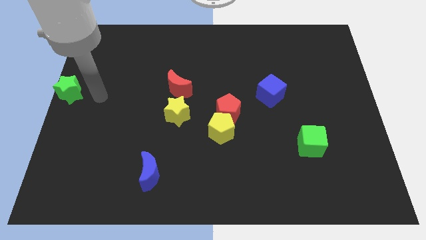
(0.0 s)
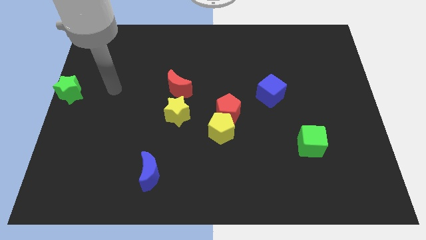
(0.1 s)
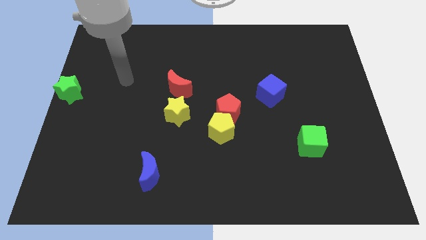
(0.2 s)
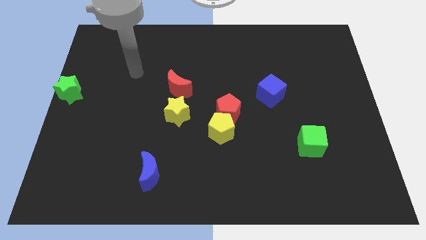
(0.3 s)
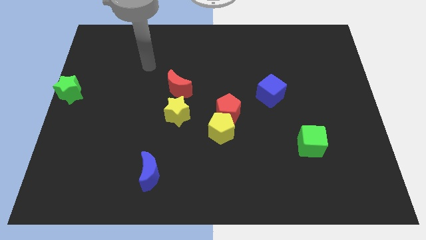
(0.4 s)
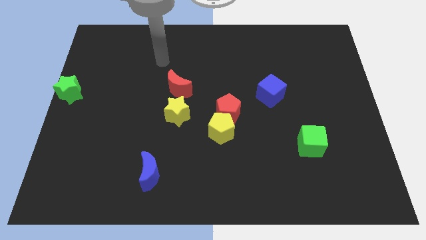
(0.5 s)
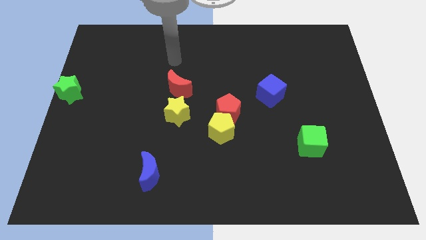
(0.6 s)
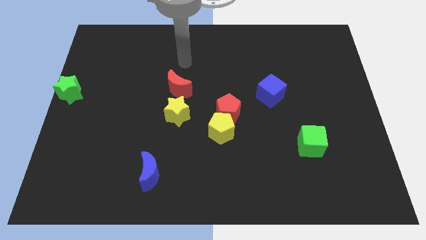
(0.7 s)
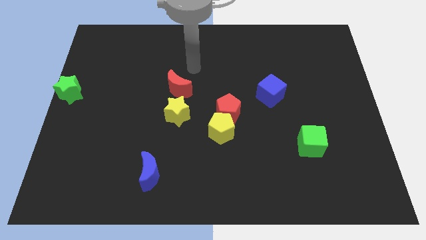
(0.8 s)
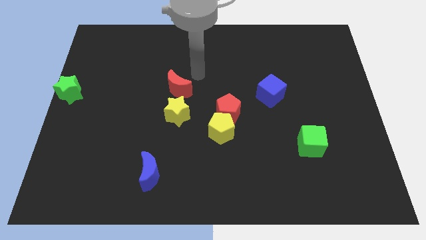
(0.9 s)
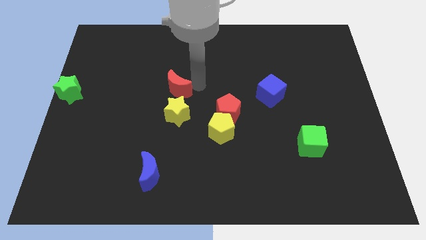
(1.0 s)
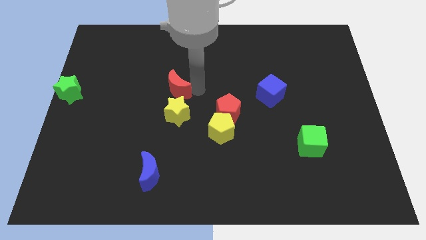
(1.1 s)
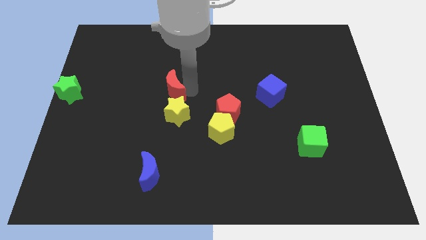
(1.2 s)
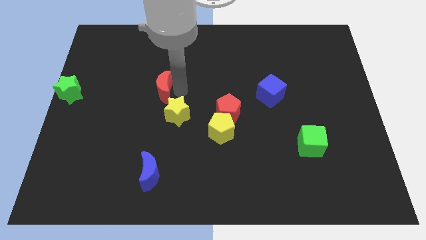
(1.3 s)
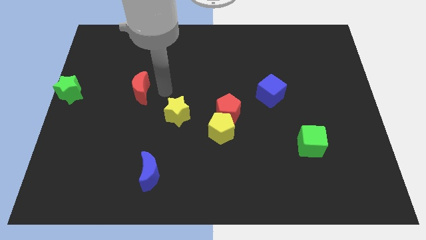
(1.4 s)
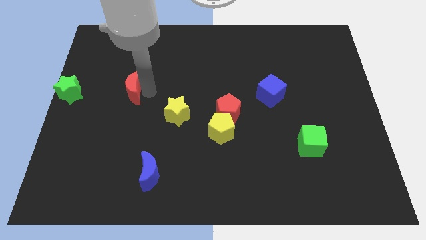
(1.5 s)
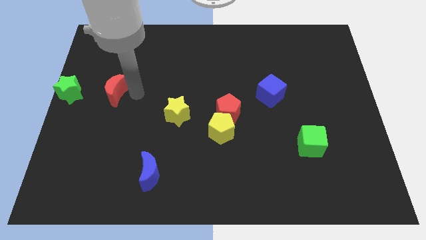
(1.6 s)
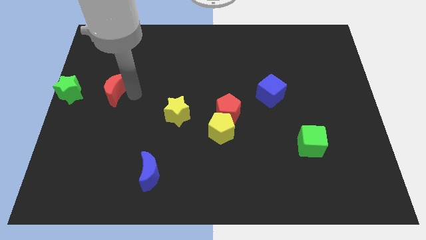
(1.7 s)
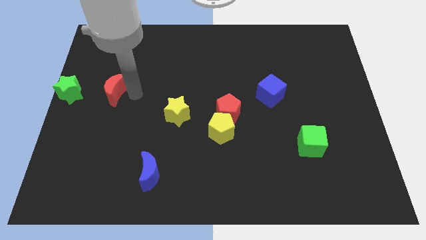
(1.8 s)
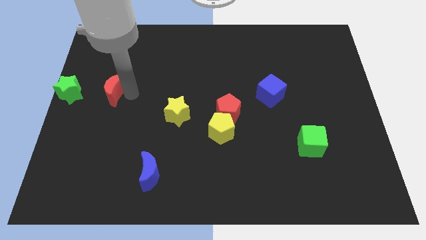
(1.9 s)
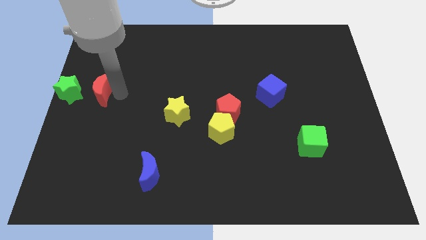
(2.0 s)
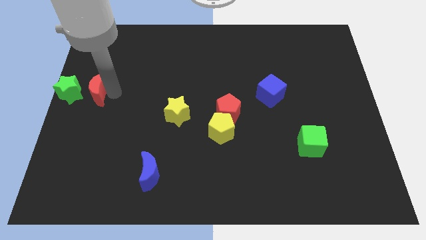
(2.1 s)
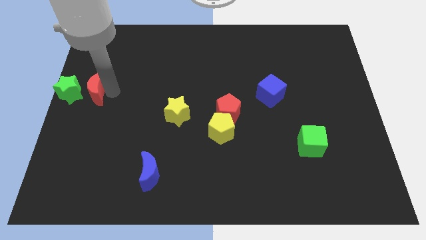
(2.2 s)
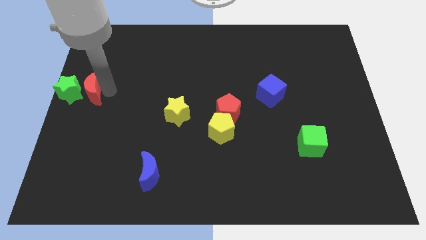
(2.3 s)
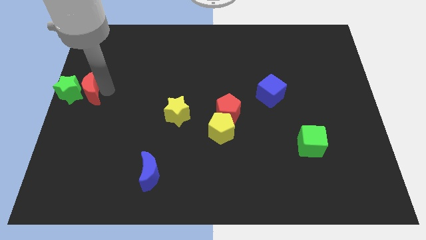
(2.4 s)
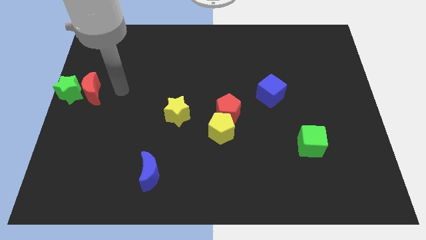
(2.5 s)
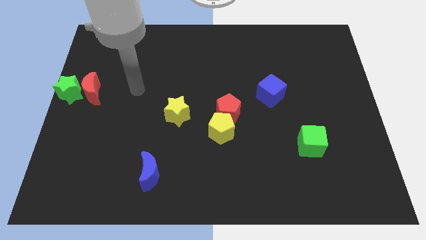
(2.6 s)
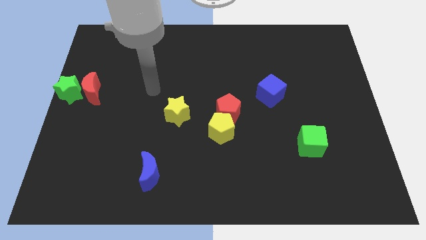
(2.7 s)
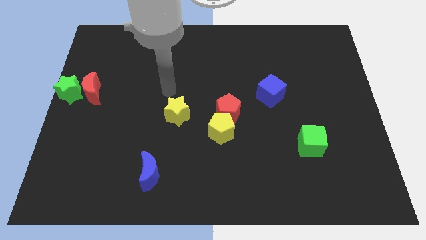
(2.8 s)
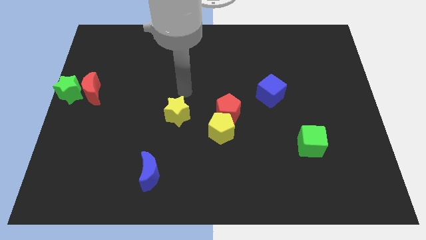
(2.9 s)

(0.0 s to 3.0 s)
push the red crescent close to the green star

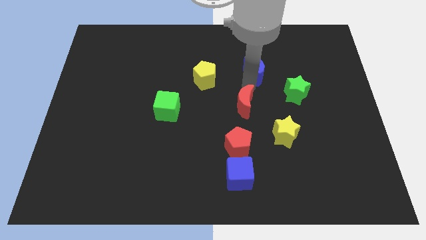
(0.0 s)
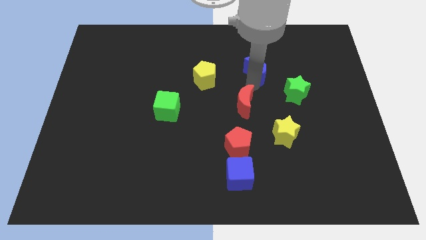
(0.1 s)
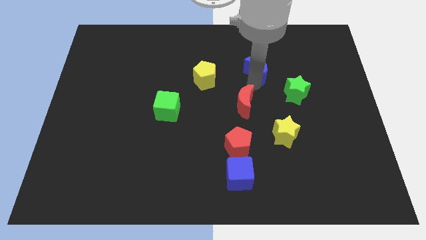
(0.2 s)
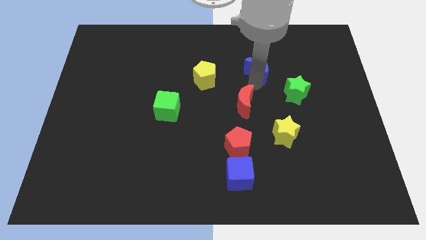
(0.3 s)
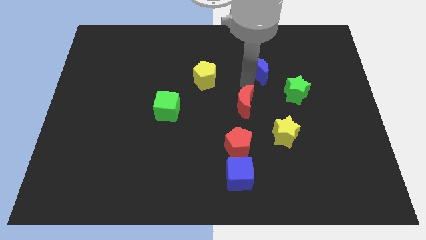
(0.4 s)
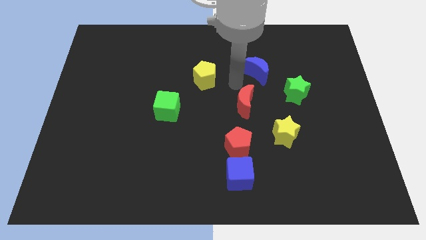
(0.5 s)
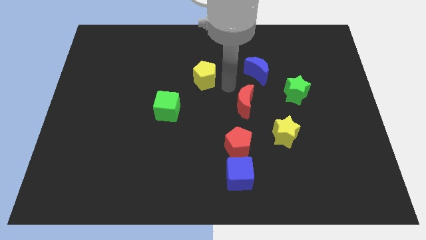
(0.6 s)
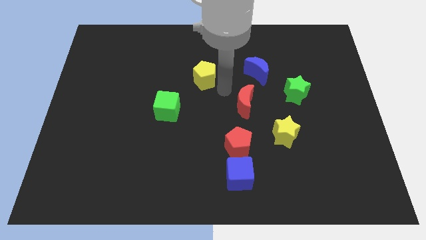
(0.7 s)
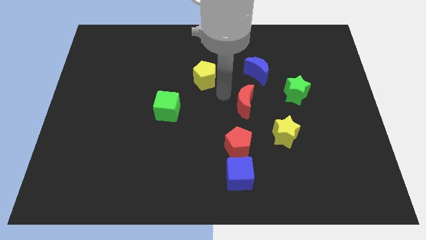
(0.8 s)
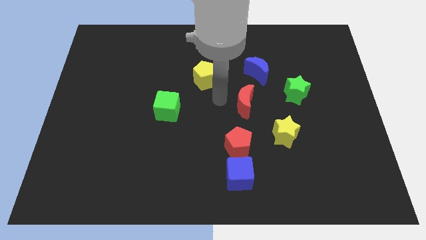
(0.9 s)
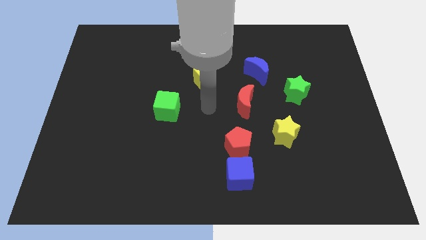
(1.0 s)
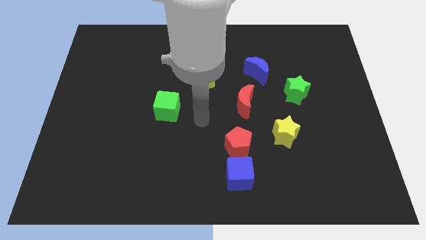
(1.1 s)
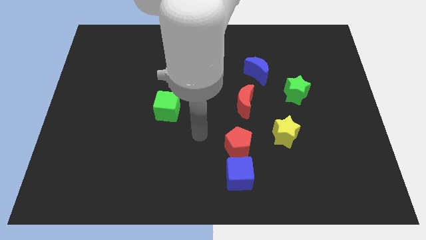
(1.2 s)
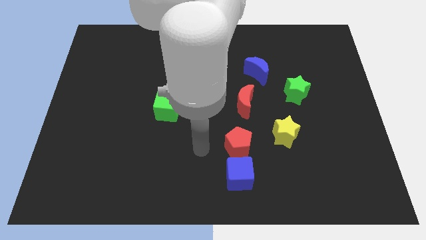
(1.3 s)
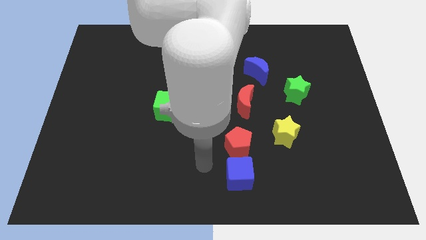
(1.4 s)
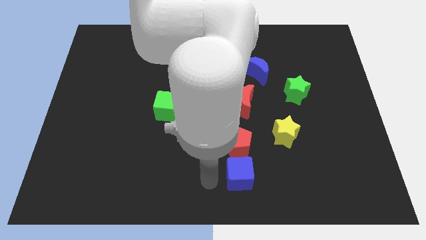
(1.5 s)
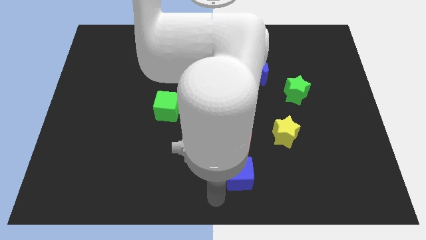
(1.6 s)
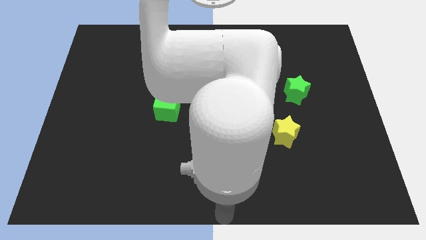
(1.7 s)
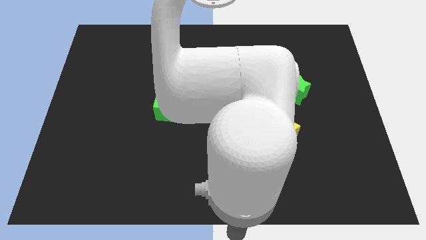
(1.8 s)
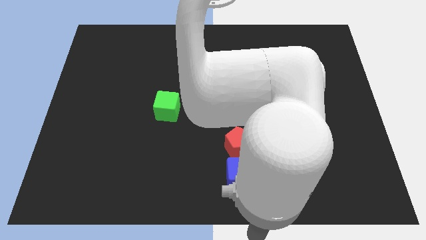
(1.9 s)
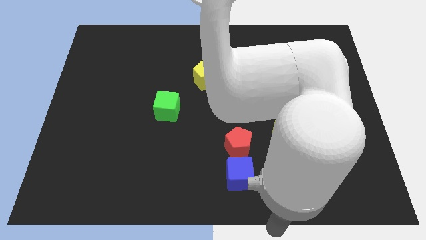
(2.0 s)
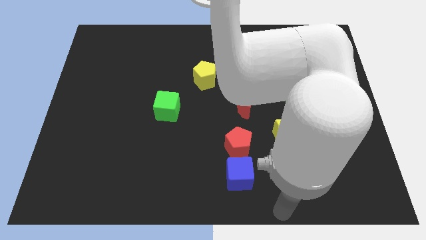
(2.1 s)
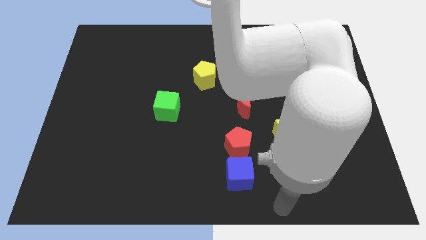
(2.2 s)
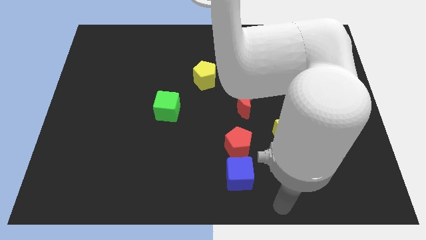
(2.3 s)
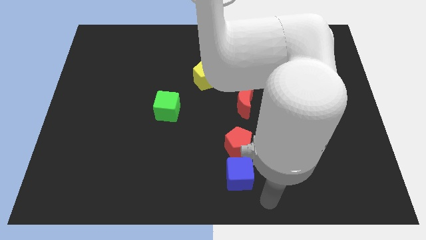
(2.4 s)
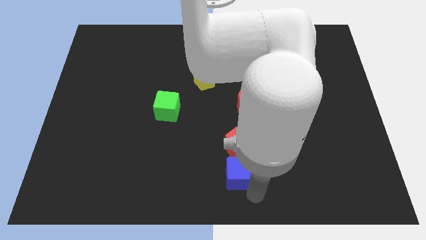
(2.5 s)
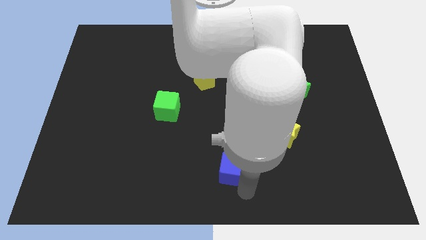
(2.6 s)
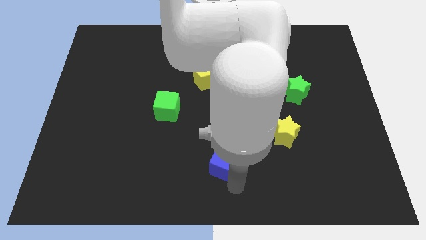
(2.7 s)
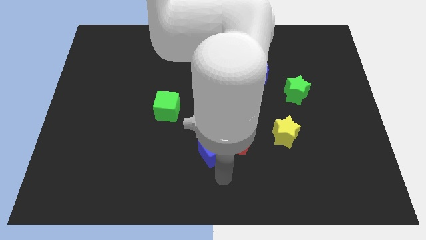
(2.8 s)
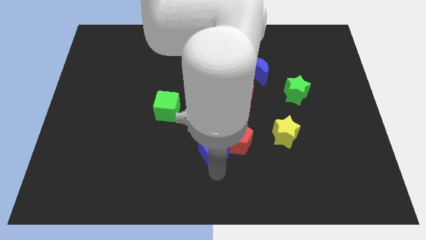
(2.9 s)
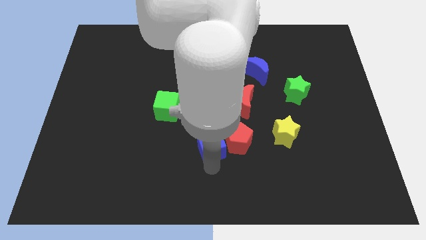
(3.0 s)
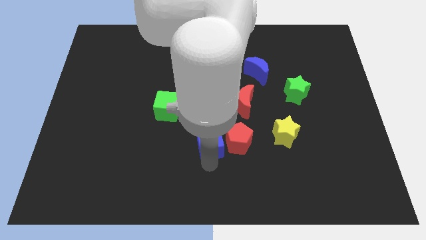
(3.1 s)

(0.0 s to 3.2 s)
move the blue cube to the bottom left side of the red pentagon

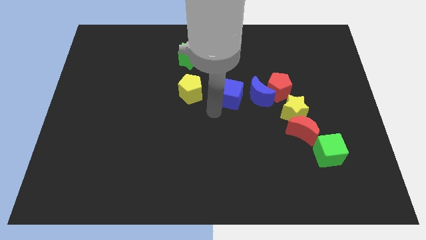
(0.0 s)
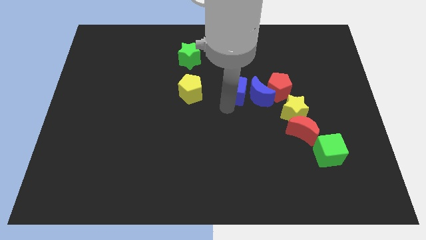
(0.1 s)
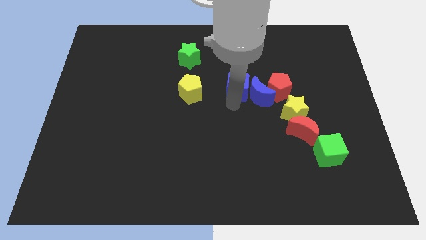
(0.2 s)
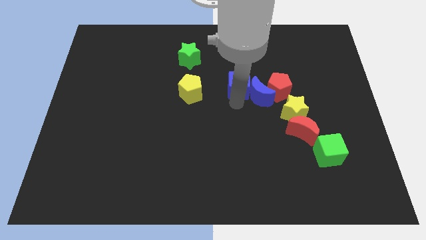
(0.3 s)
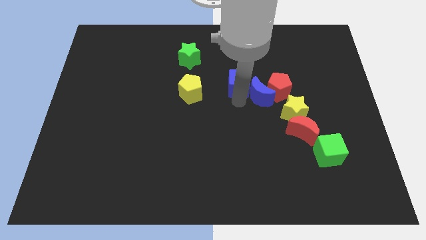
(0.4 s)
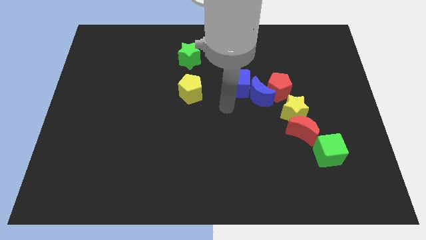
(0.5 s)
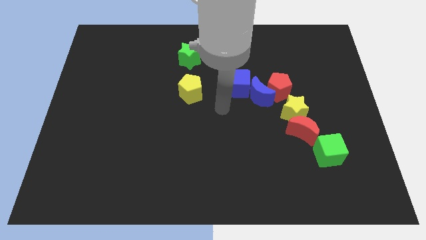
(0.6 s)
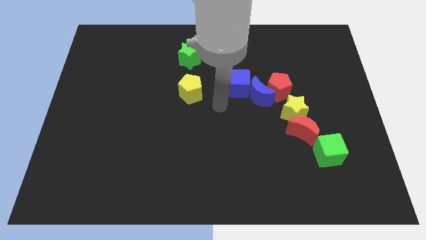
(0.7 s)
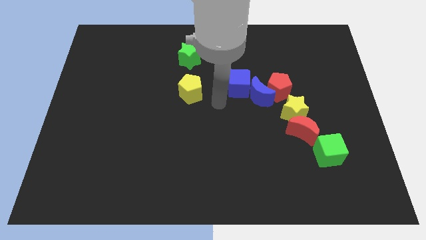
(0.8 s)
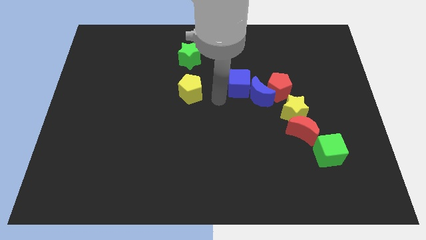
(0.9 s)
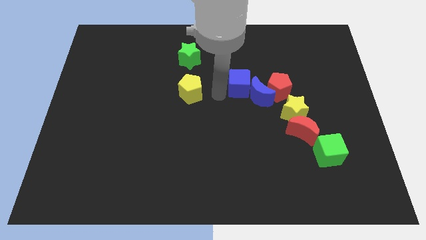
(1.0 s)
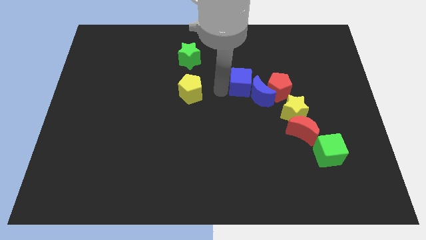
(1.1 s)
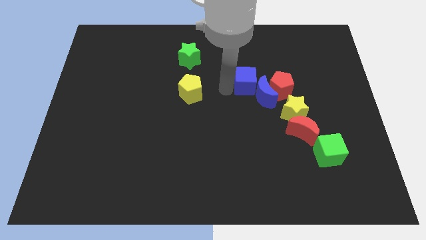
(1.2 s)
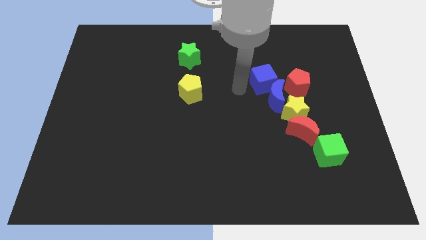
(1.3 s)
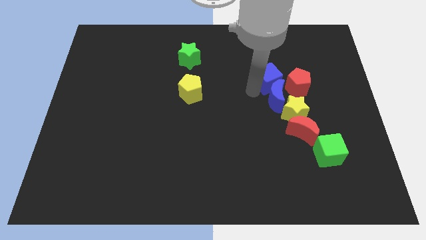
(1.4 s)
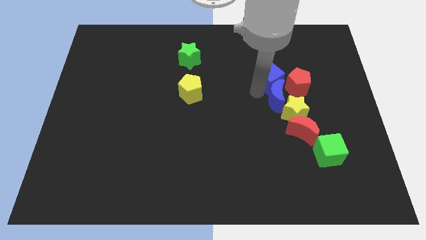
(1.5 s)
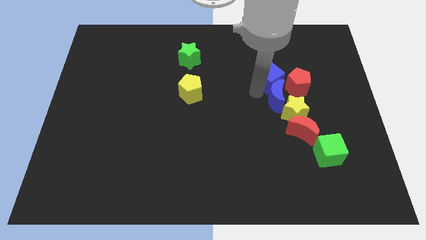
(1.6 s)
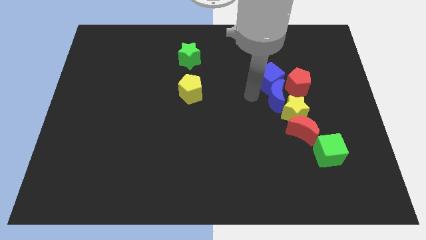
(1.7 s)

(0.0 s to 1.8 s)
push the blue cube into the blue crescent

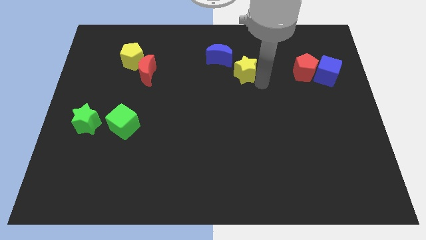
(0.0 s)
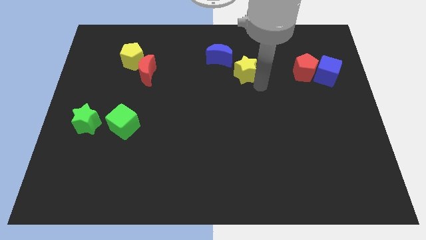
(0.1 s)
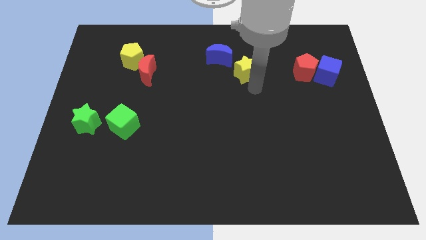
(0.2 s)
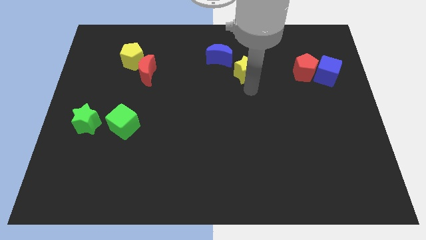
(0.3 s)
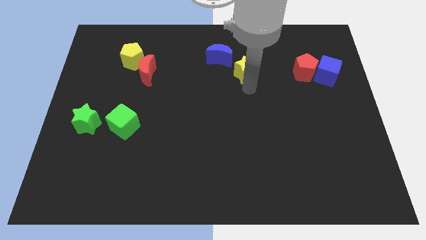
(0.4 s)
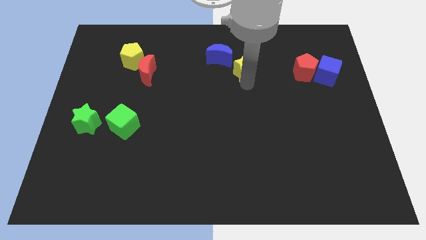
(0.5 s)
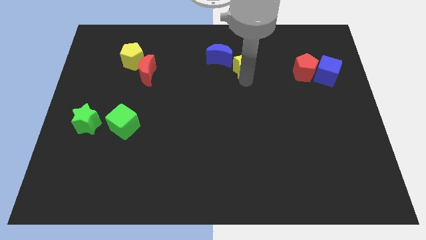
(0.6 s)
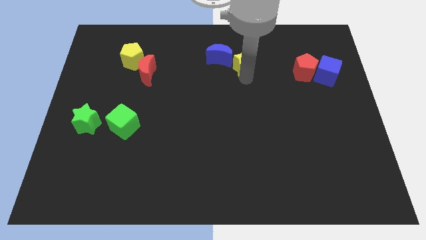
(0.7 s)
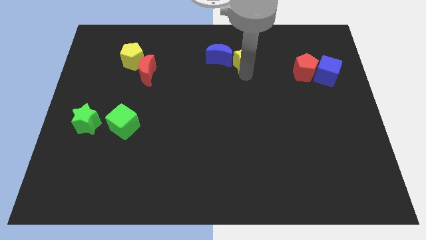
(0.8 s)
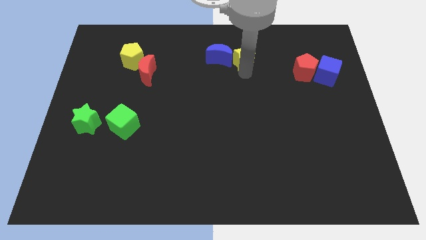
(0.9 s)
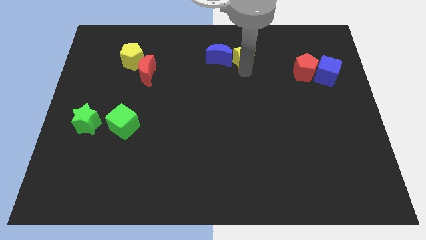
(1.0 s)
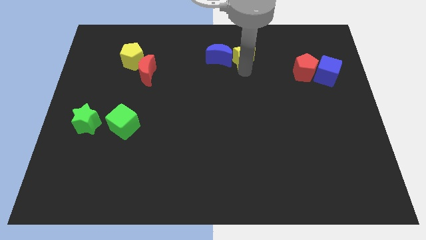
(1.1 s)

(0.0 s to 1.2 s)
place the yellow star right to the blue moon
